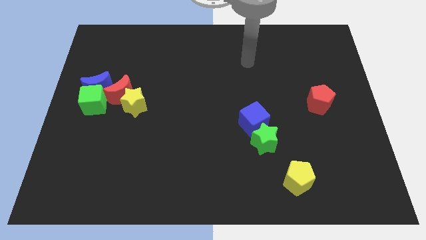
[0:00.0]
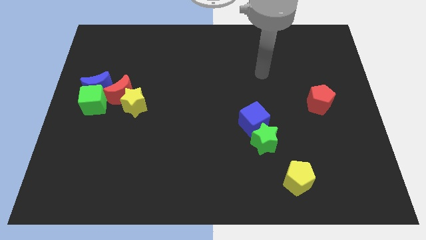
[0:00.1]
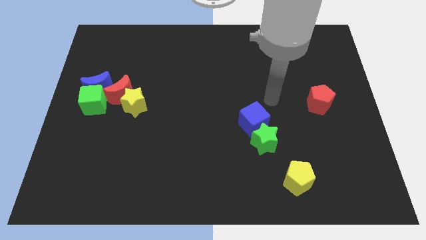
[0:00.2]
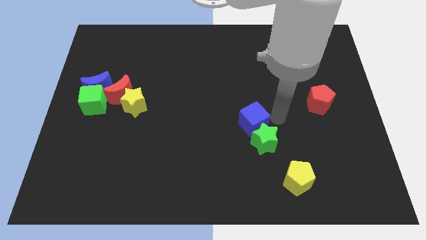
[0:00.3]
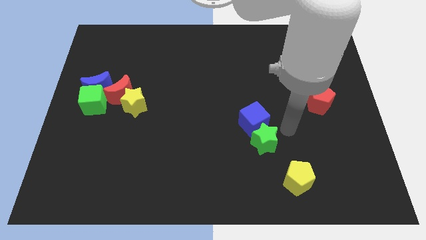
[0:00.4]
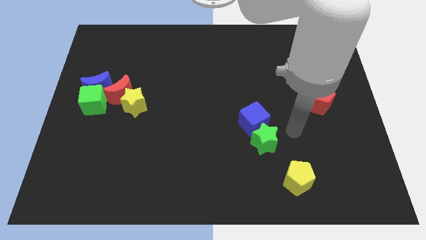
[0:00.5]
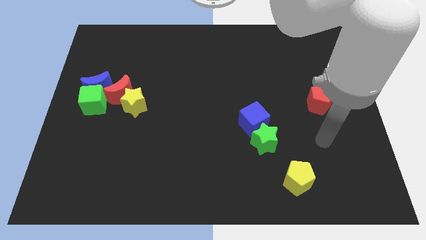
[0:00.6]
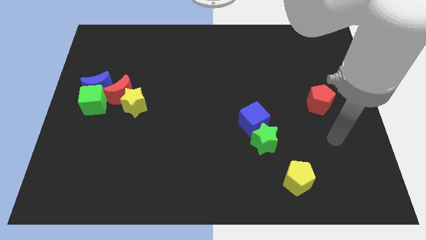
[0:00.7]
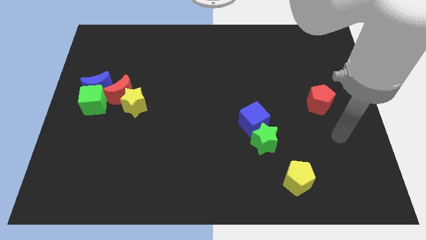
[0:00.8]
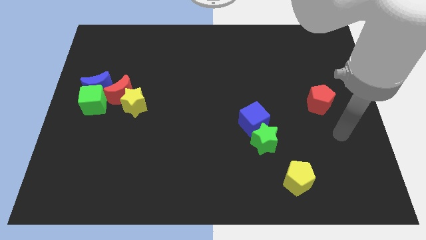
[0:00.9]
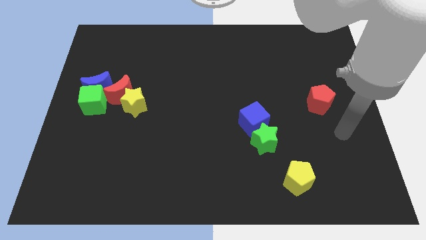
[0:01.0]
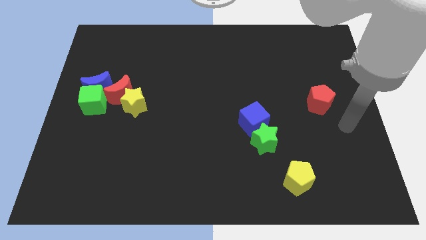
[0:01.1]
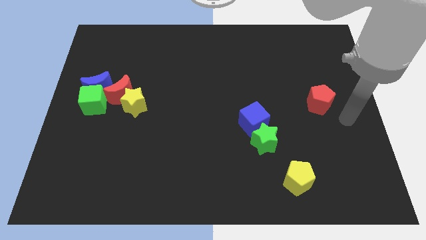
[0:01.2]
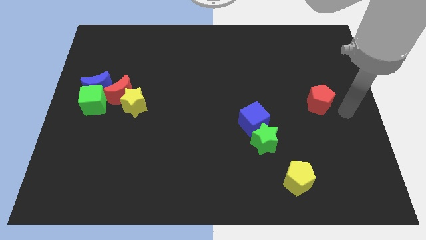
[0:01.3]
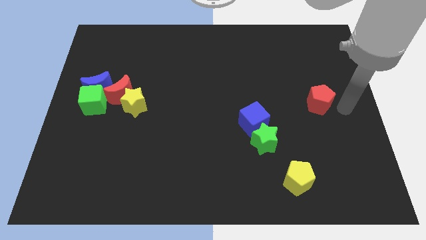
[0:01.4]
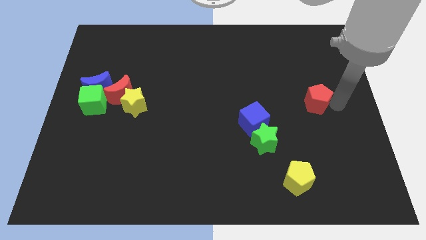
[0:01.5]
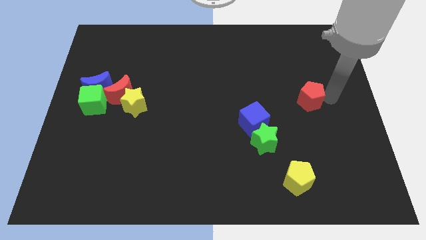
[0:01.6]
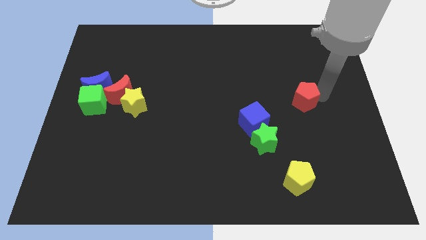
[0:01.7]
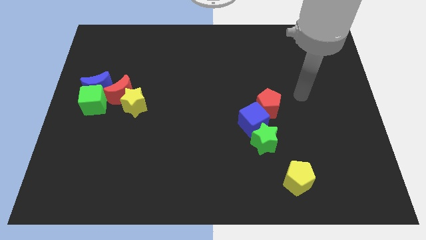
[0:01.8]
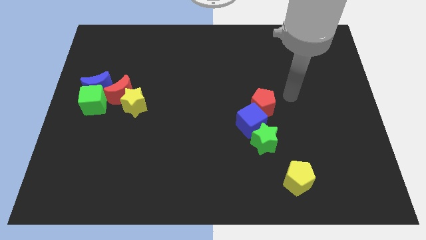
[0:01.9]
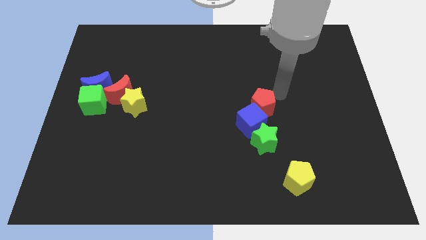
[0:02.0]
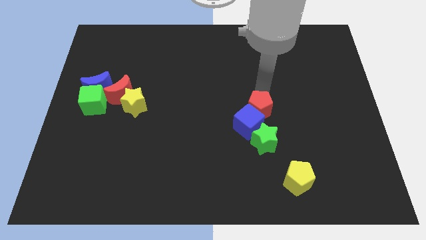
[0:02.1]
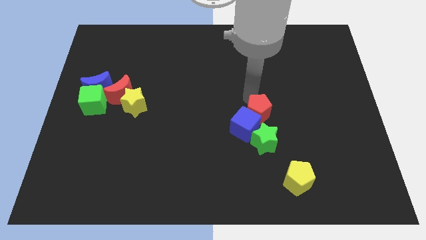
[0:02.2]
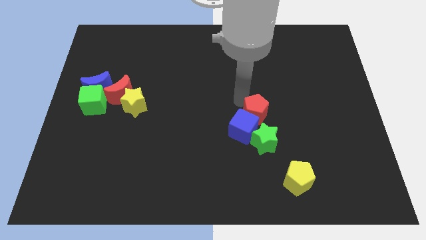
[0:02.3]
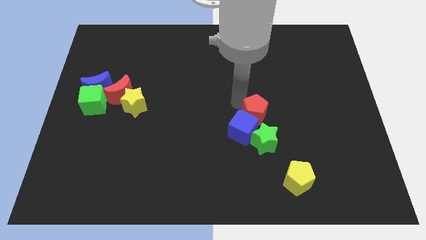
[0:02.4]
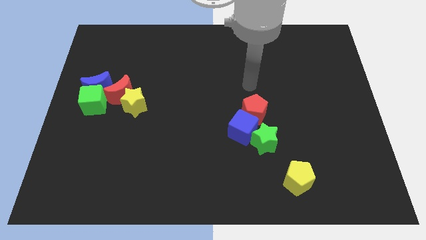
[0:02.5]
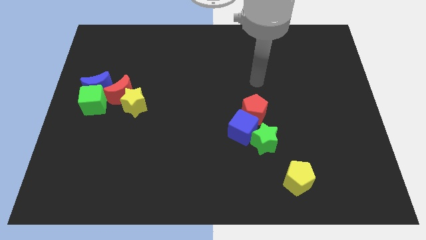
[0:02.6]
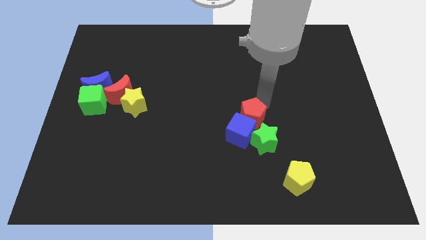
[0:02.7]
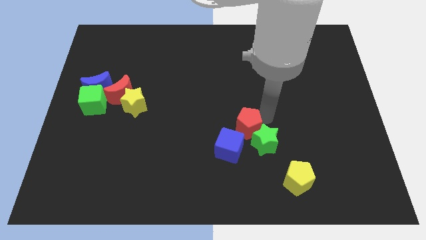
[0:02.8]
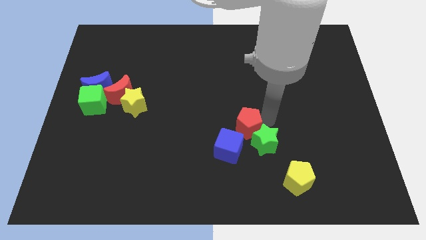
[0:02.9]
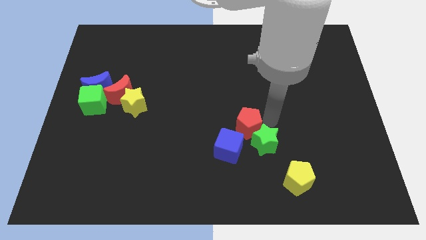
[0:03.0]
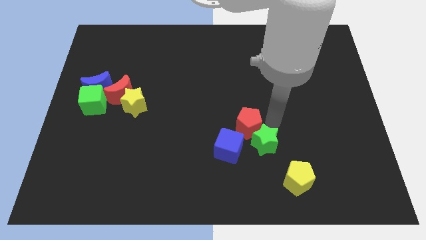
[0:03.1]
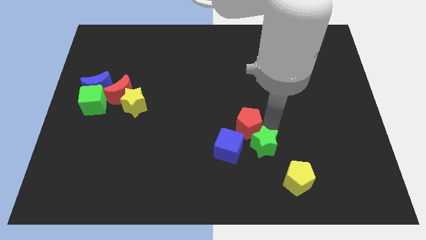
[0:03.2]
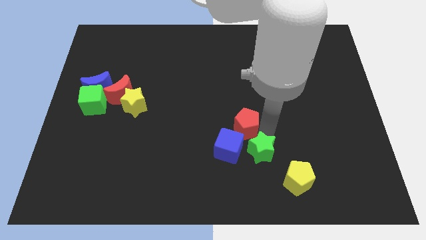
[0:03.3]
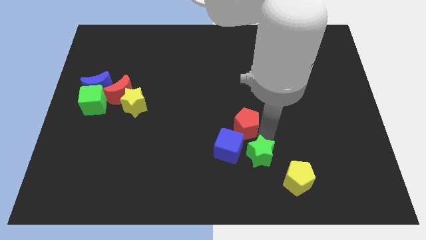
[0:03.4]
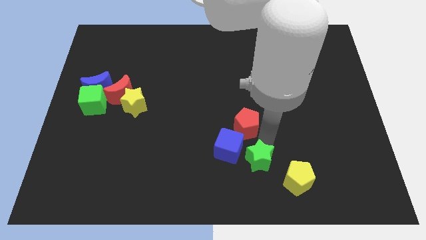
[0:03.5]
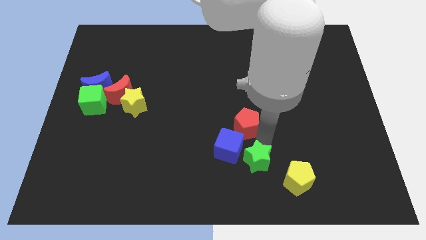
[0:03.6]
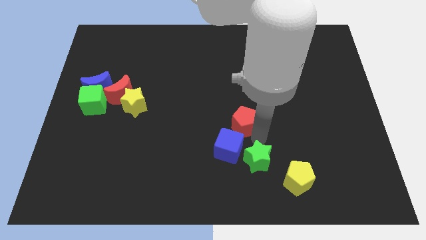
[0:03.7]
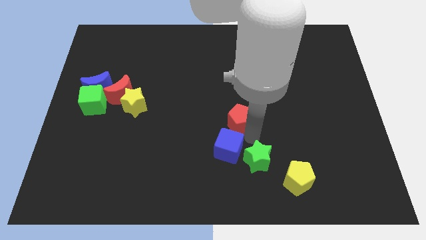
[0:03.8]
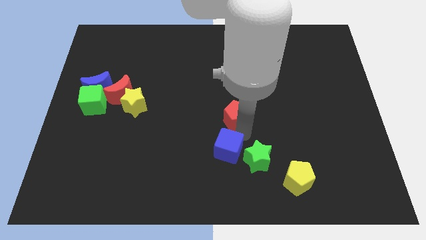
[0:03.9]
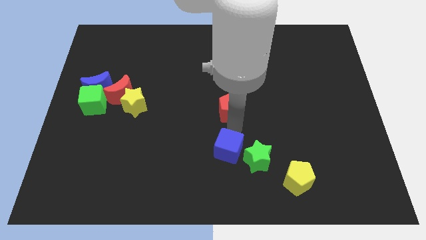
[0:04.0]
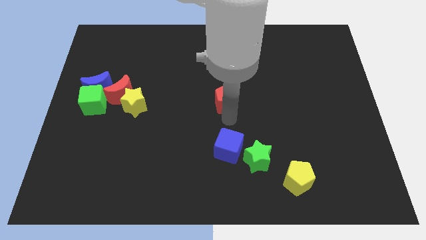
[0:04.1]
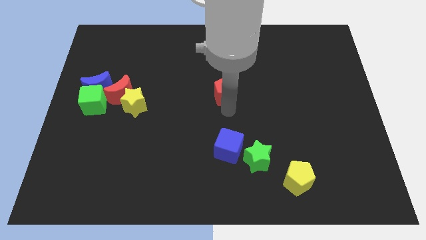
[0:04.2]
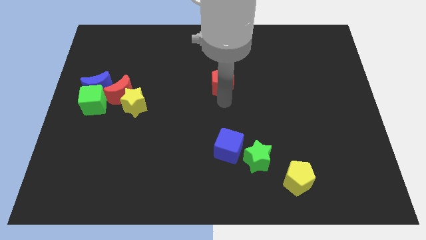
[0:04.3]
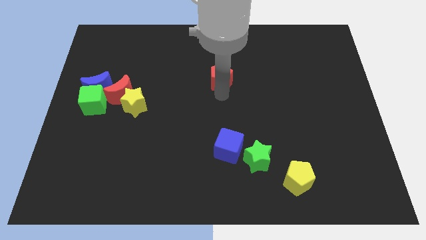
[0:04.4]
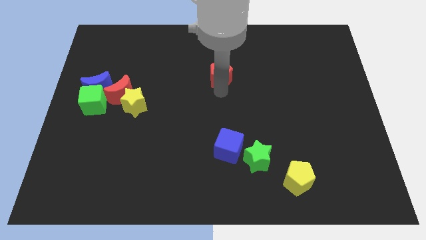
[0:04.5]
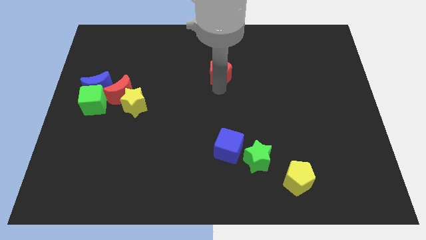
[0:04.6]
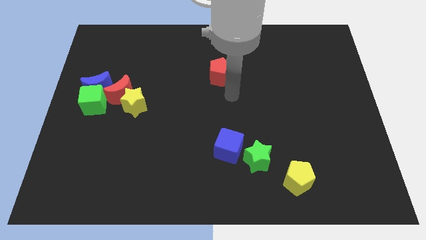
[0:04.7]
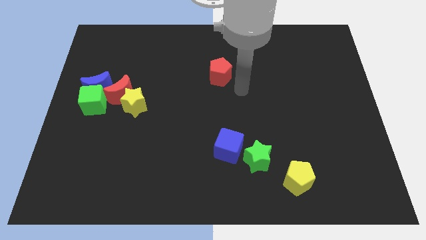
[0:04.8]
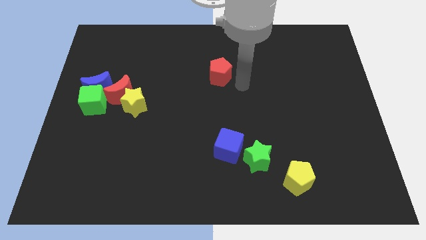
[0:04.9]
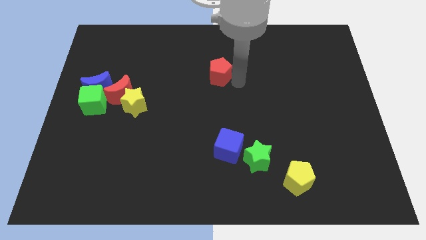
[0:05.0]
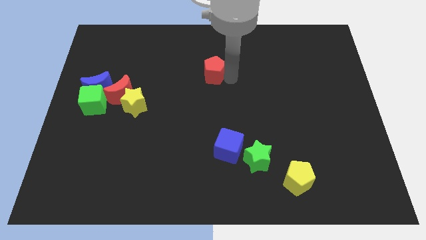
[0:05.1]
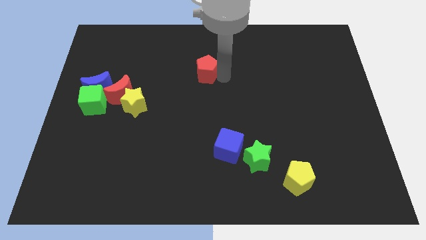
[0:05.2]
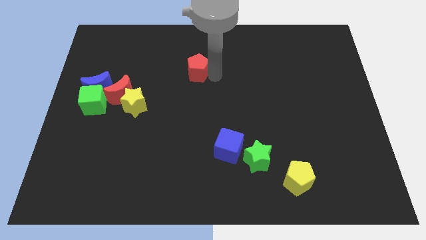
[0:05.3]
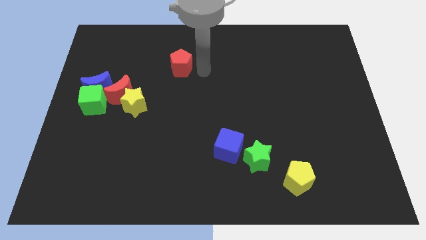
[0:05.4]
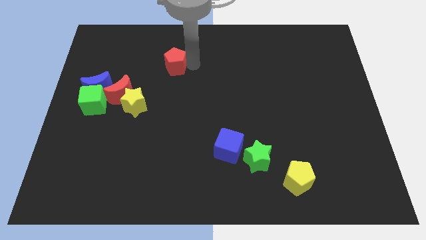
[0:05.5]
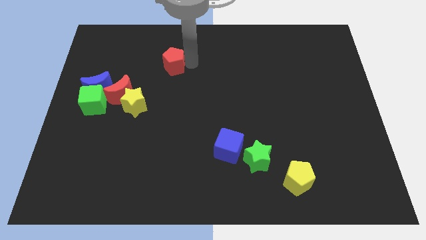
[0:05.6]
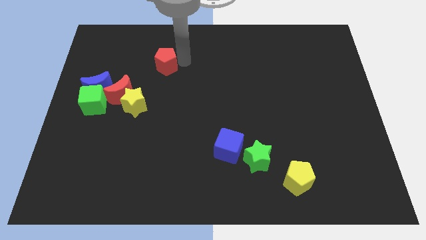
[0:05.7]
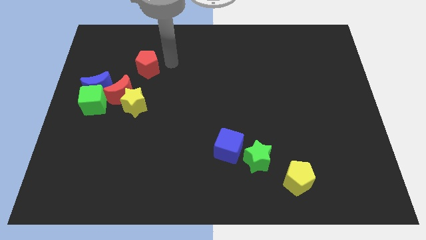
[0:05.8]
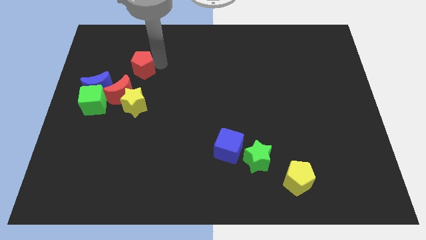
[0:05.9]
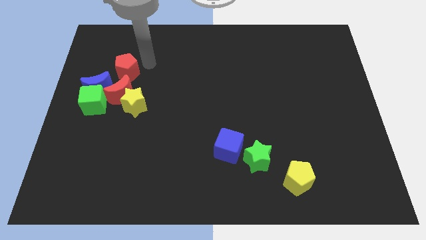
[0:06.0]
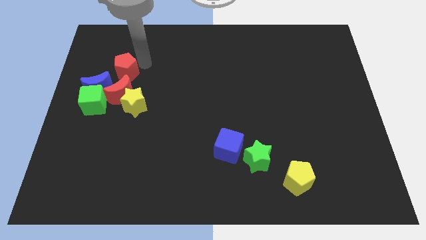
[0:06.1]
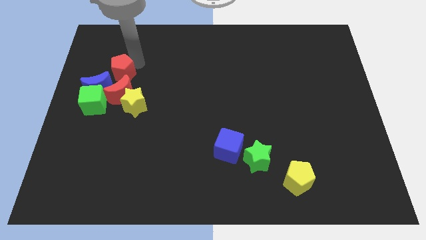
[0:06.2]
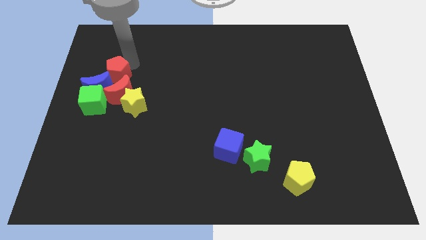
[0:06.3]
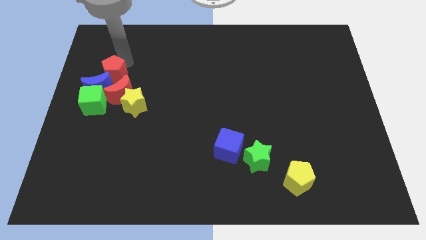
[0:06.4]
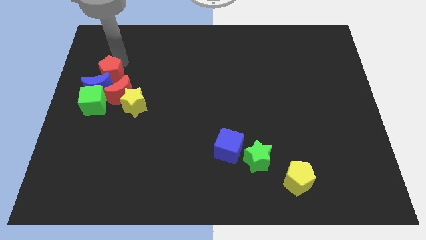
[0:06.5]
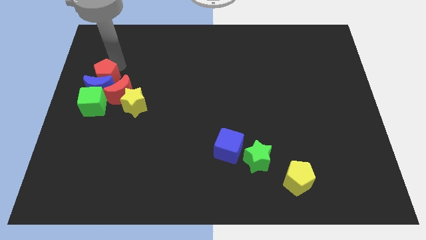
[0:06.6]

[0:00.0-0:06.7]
put the red pentagon close to the blue moon

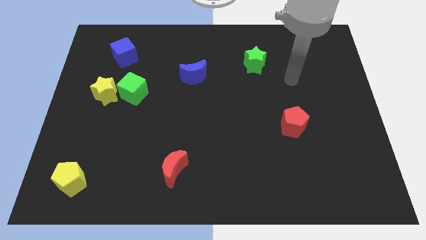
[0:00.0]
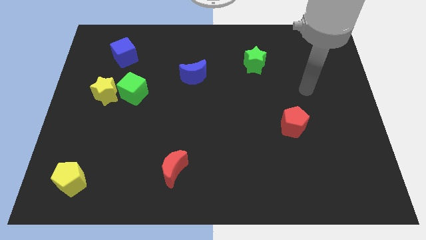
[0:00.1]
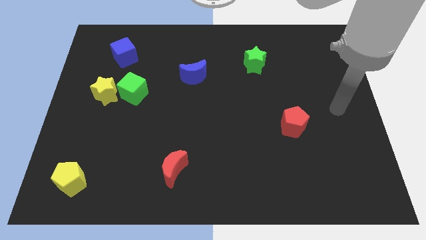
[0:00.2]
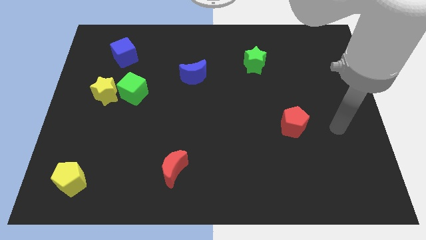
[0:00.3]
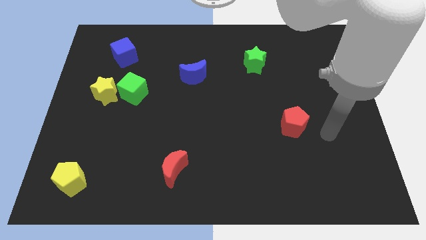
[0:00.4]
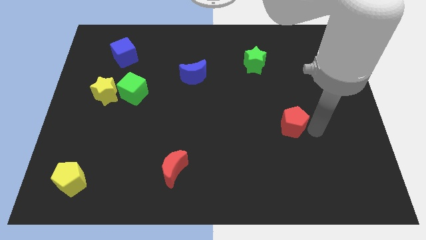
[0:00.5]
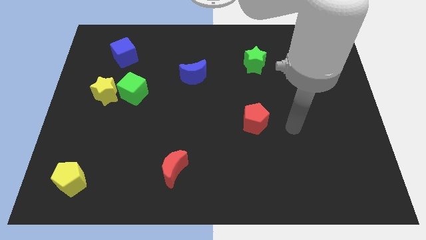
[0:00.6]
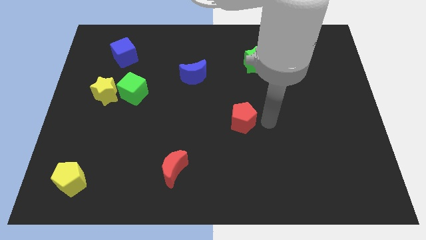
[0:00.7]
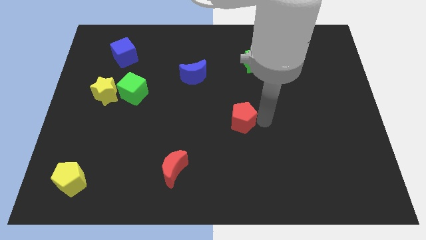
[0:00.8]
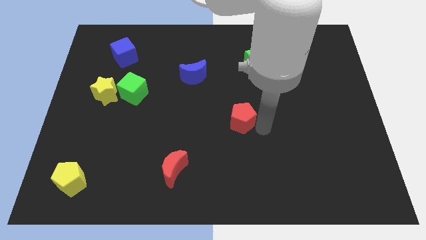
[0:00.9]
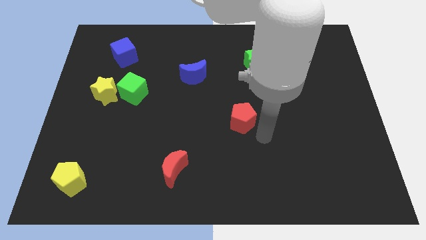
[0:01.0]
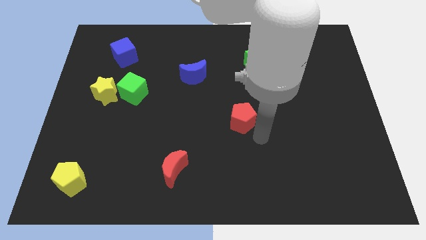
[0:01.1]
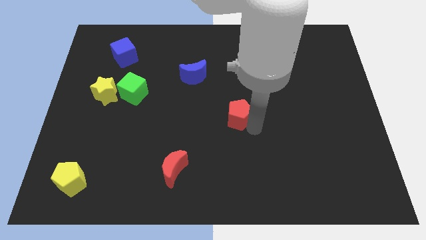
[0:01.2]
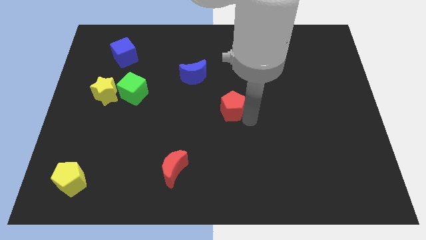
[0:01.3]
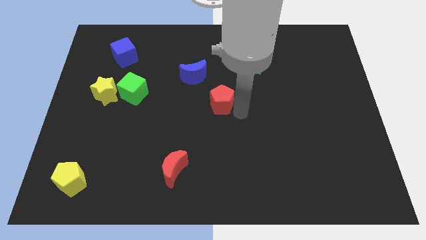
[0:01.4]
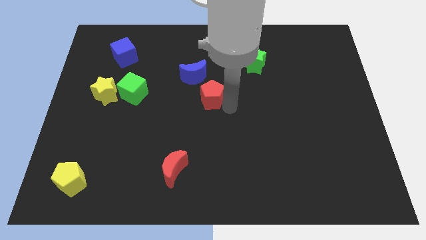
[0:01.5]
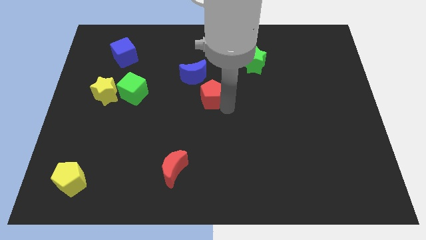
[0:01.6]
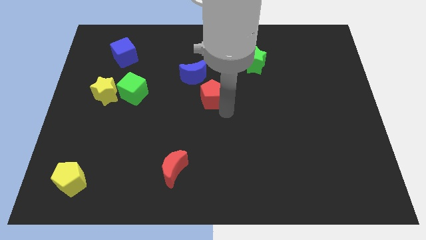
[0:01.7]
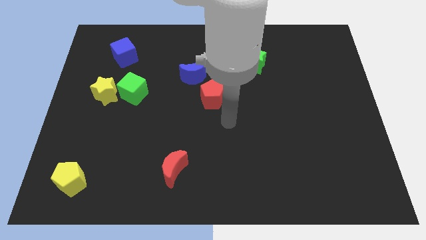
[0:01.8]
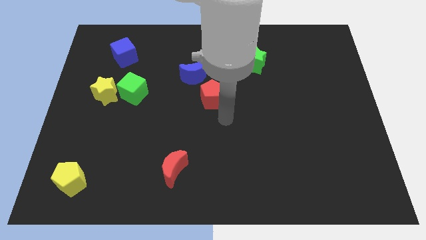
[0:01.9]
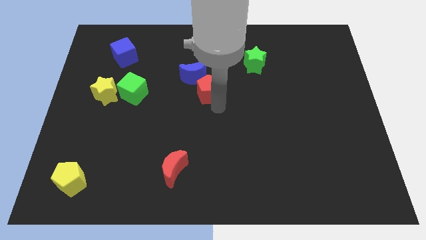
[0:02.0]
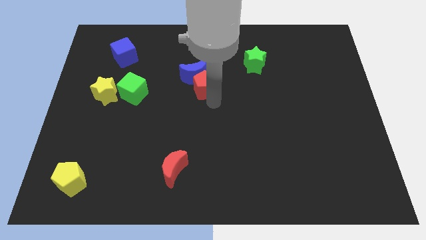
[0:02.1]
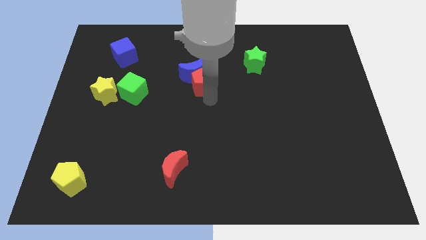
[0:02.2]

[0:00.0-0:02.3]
slide the red pentagon towards the blue moon
